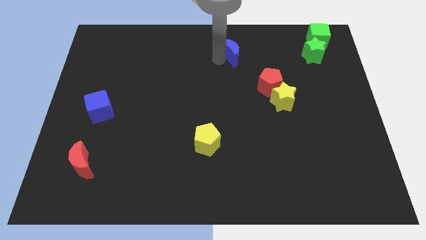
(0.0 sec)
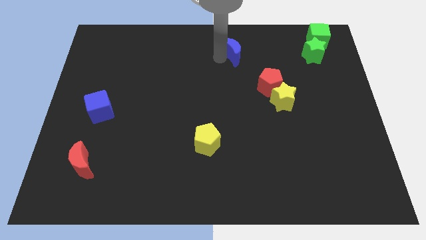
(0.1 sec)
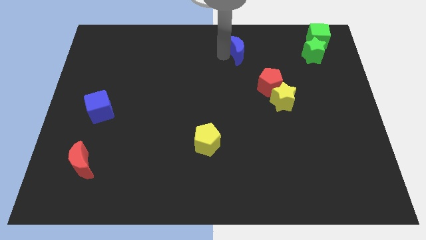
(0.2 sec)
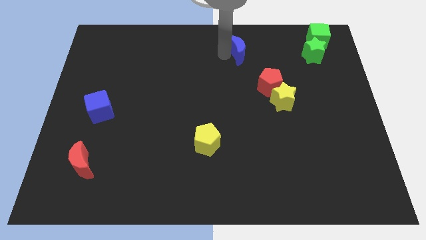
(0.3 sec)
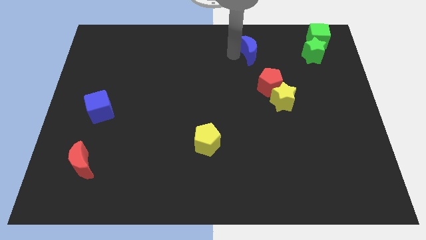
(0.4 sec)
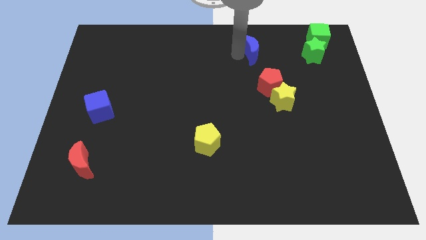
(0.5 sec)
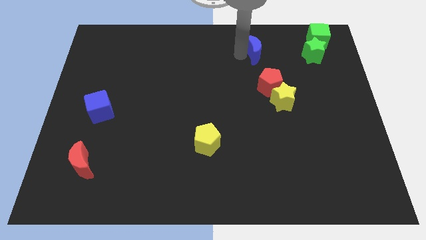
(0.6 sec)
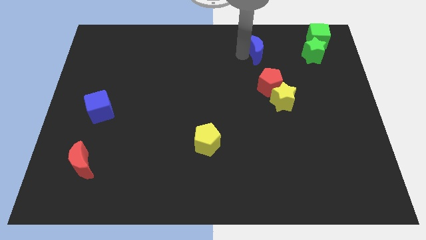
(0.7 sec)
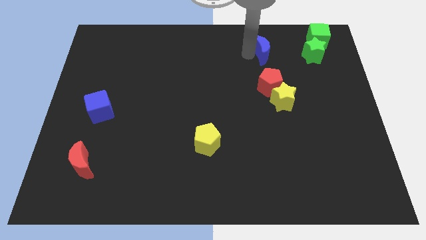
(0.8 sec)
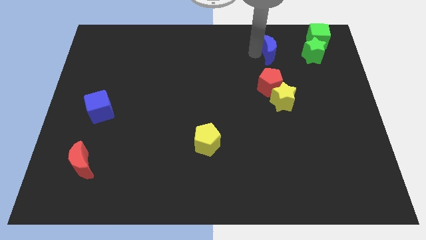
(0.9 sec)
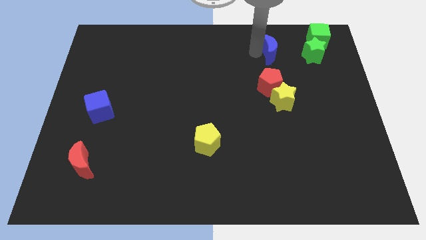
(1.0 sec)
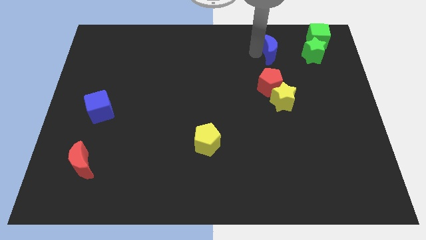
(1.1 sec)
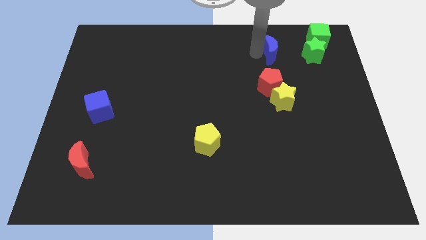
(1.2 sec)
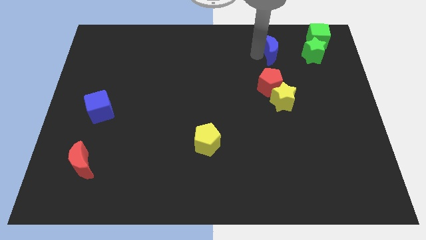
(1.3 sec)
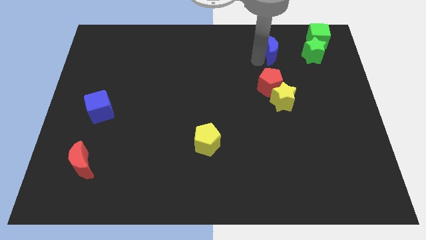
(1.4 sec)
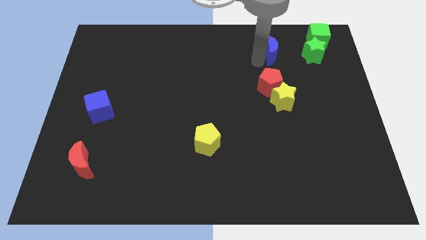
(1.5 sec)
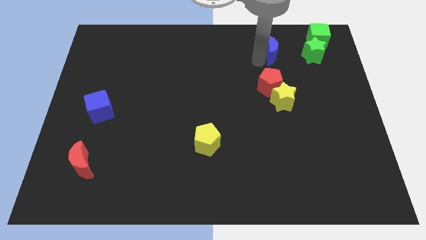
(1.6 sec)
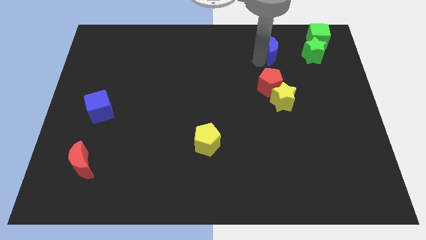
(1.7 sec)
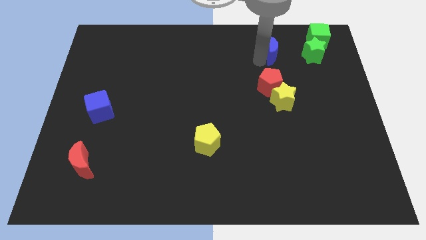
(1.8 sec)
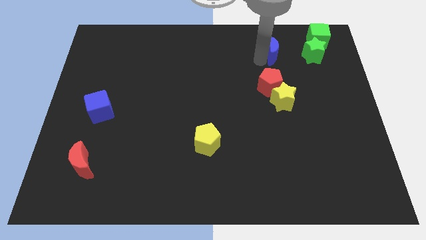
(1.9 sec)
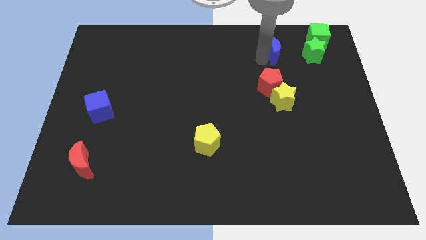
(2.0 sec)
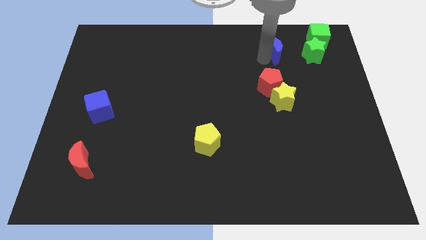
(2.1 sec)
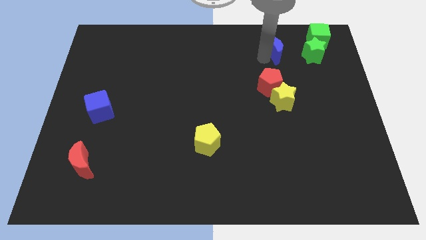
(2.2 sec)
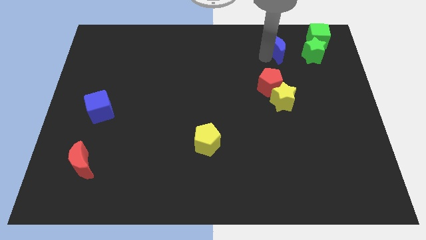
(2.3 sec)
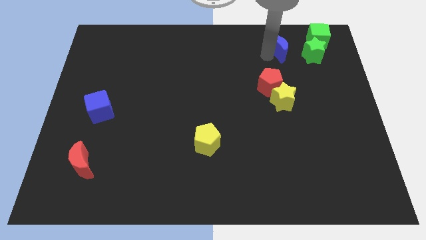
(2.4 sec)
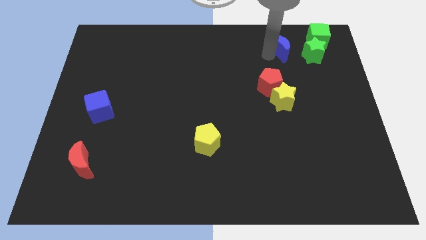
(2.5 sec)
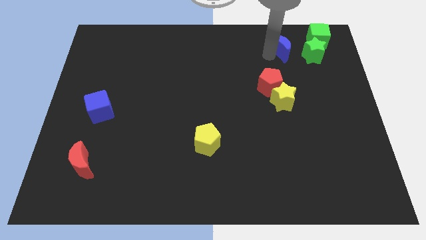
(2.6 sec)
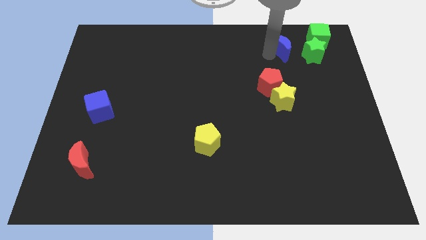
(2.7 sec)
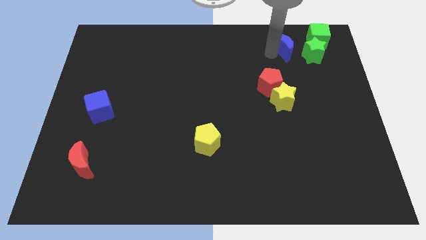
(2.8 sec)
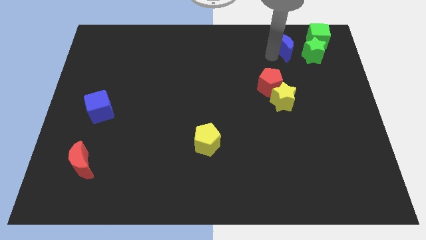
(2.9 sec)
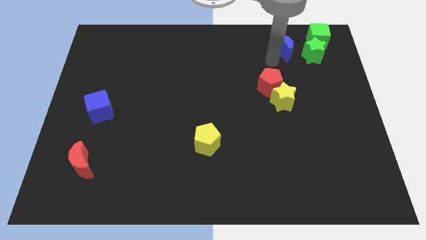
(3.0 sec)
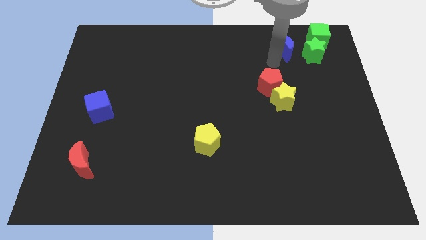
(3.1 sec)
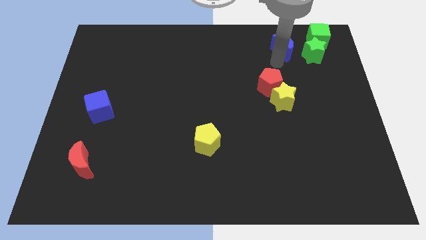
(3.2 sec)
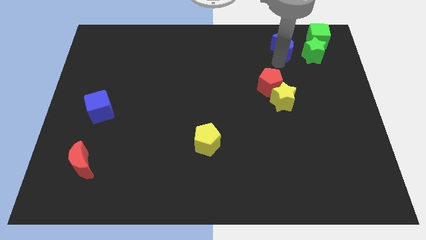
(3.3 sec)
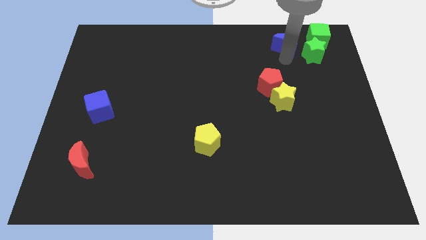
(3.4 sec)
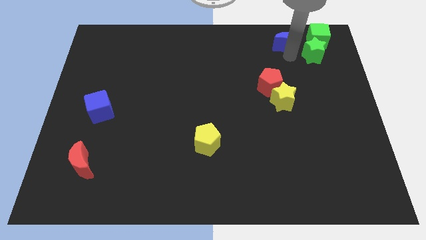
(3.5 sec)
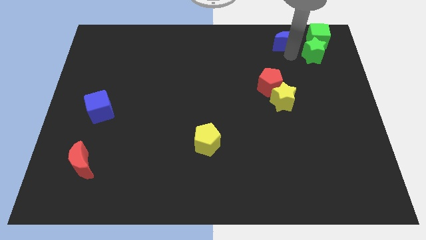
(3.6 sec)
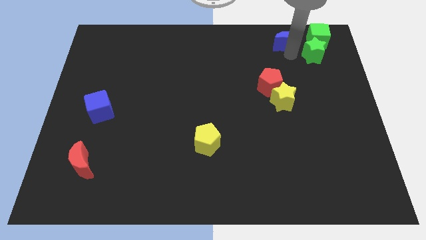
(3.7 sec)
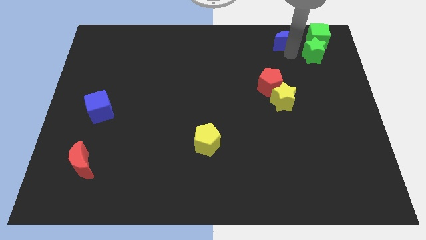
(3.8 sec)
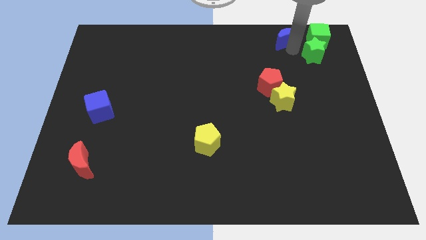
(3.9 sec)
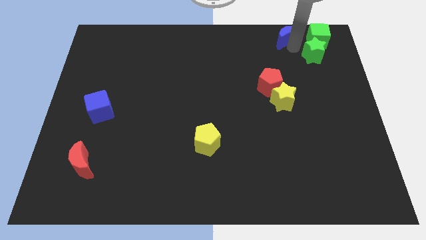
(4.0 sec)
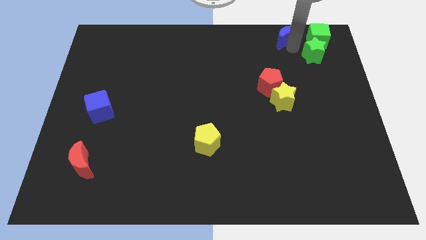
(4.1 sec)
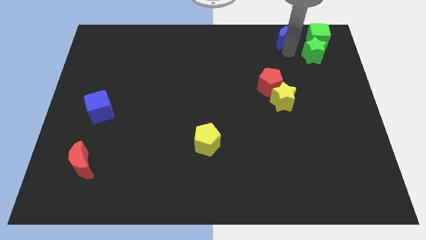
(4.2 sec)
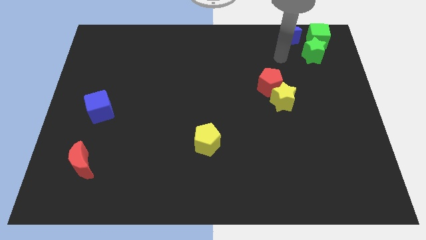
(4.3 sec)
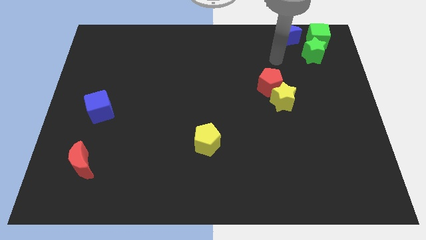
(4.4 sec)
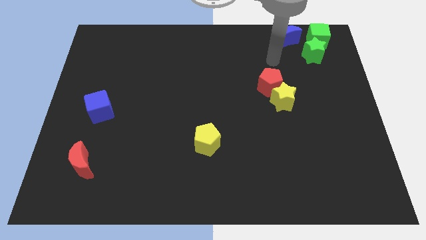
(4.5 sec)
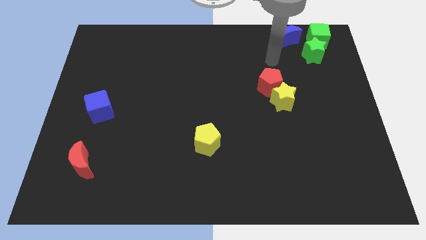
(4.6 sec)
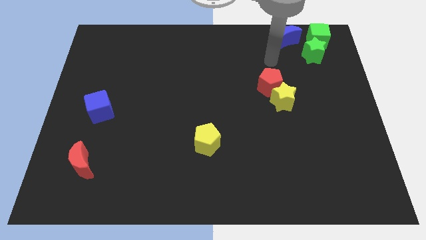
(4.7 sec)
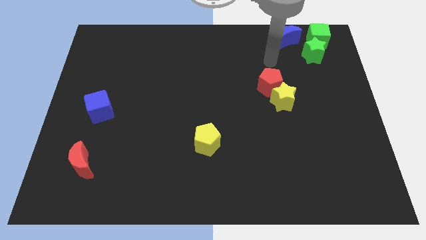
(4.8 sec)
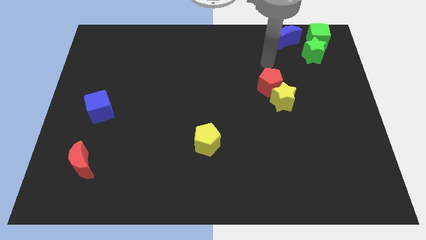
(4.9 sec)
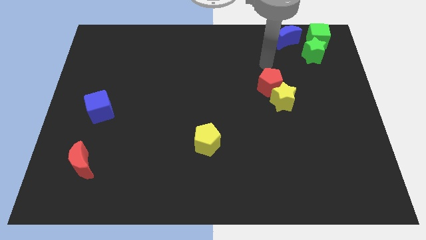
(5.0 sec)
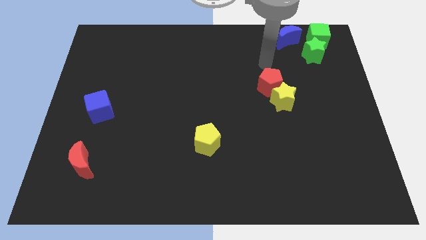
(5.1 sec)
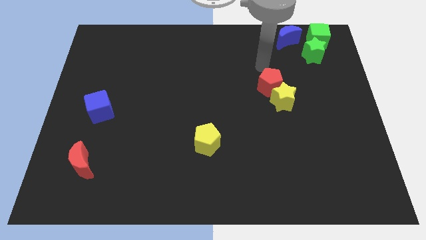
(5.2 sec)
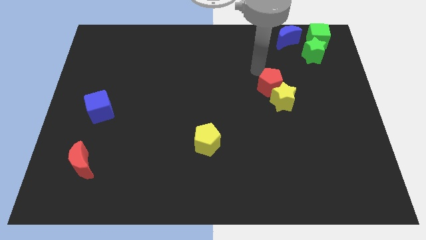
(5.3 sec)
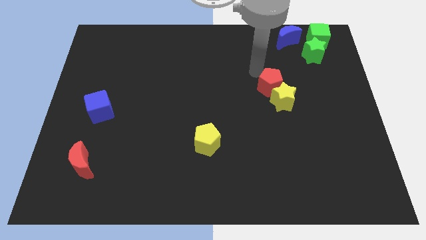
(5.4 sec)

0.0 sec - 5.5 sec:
move the blue crescent left to the green cube

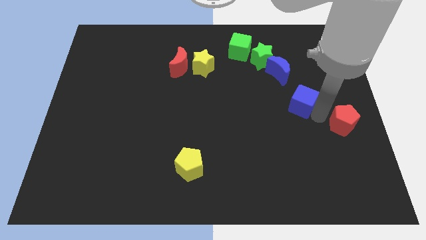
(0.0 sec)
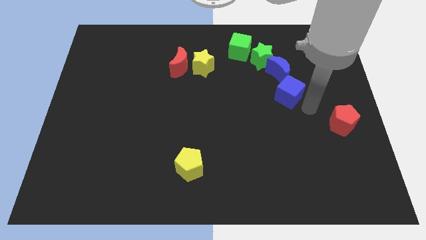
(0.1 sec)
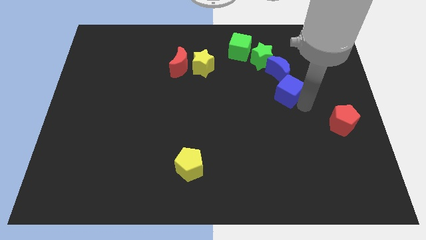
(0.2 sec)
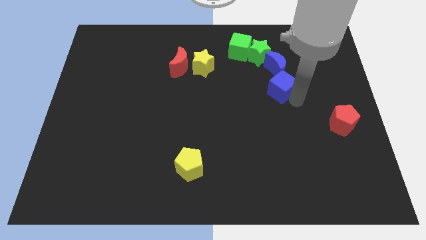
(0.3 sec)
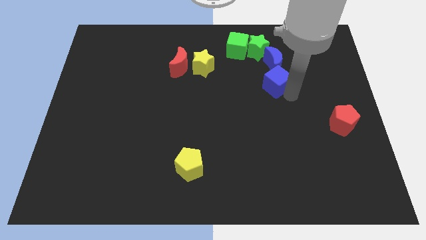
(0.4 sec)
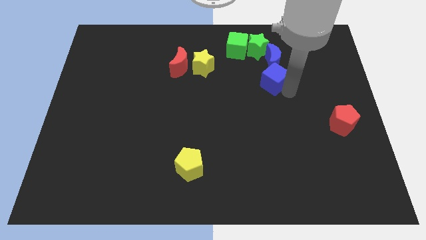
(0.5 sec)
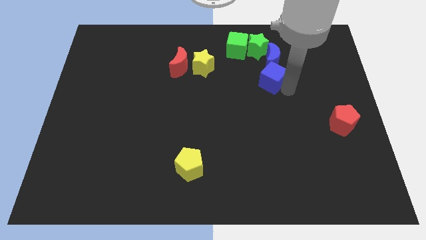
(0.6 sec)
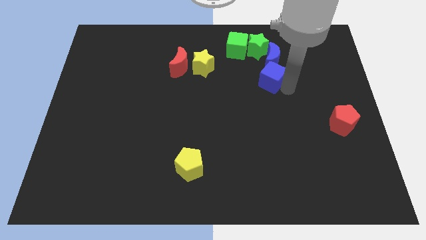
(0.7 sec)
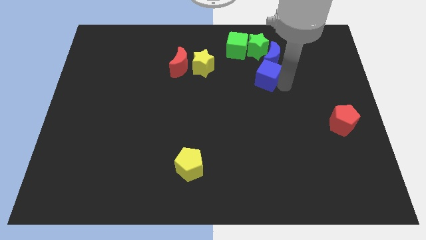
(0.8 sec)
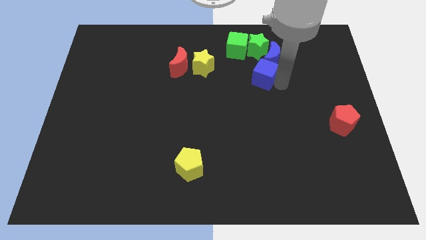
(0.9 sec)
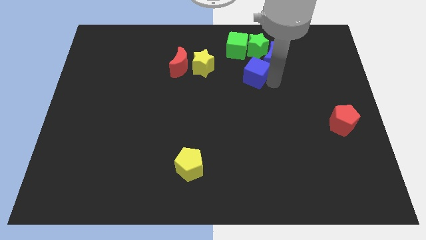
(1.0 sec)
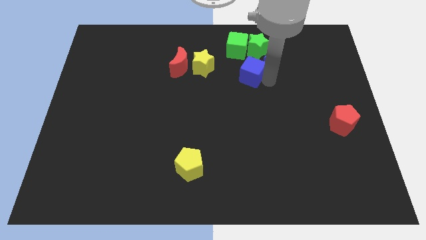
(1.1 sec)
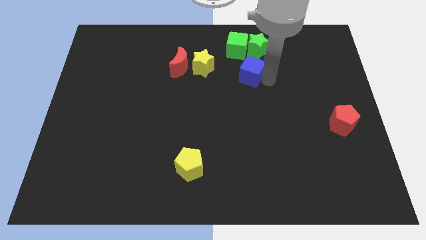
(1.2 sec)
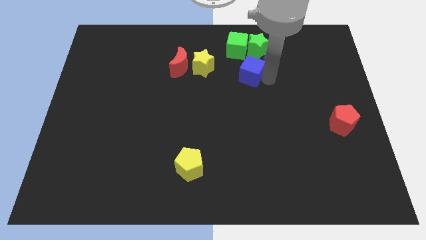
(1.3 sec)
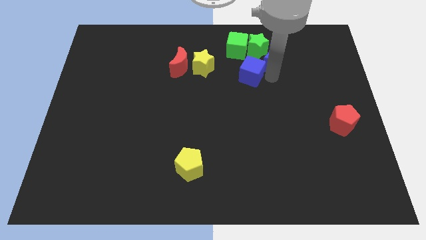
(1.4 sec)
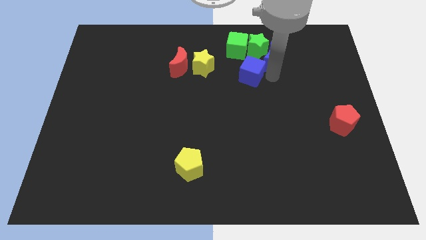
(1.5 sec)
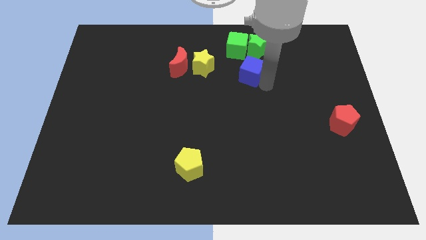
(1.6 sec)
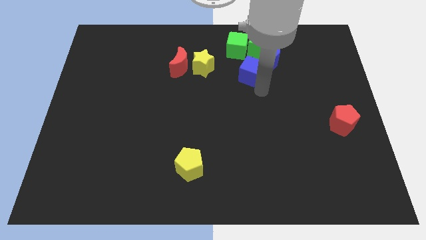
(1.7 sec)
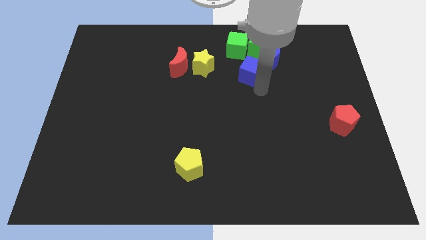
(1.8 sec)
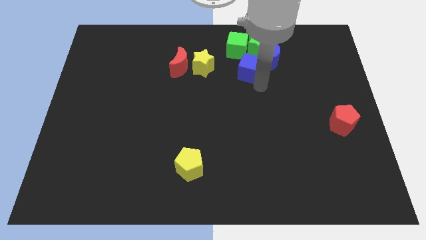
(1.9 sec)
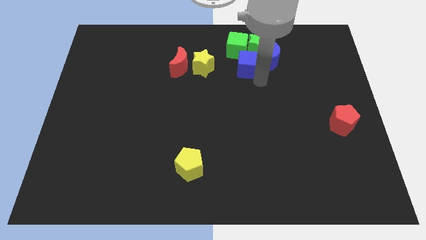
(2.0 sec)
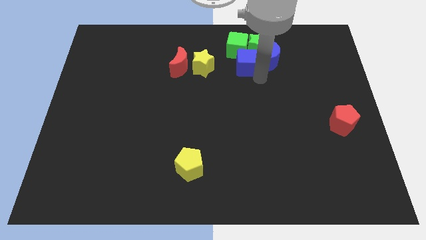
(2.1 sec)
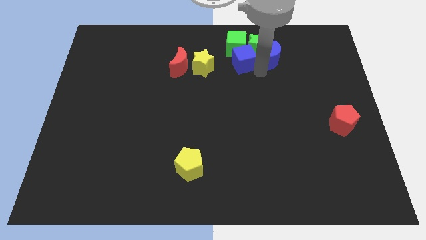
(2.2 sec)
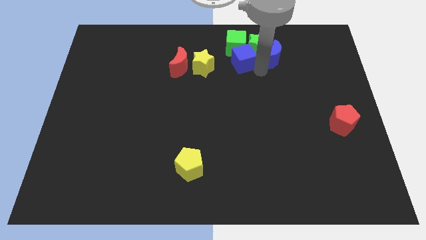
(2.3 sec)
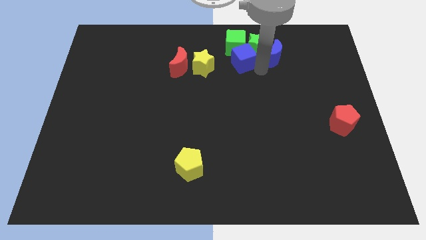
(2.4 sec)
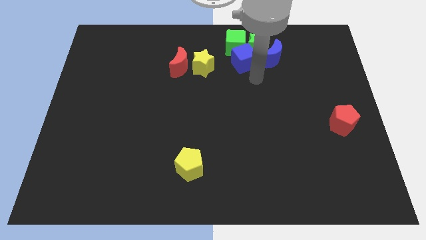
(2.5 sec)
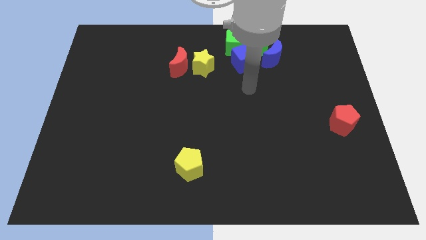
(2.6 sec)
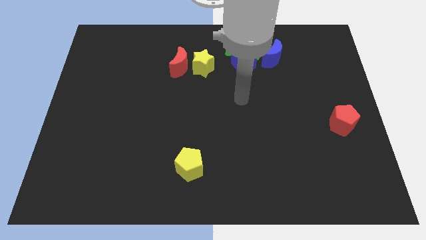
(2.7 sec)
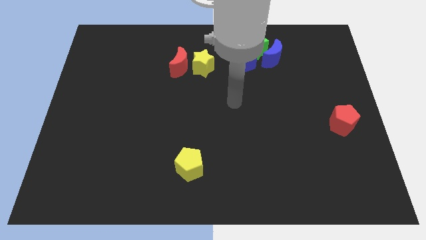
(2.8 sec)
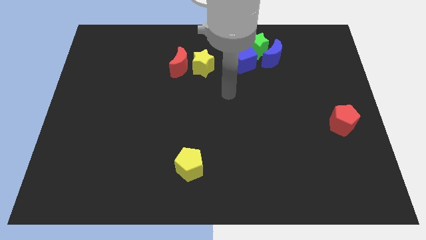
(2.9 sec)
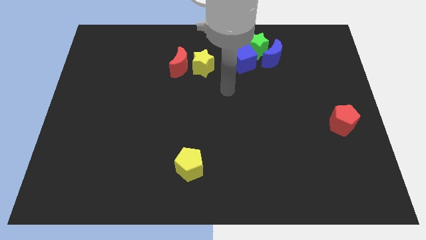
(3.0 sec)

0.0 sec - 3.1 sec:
push the blue cube to the green blocks and blue crescent

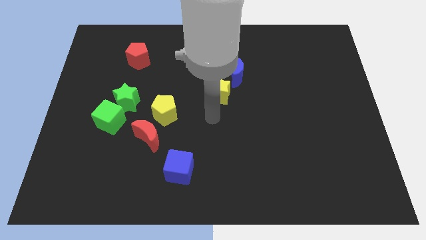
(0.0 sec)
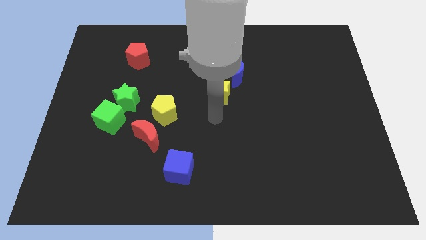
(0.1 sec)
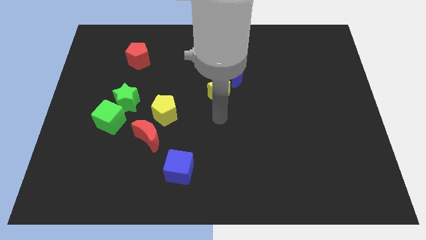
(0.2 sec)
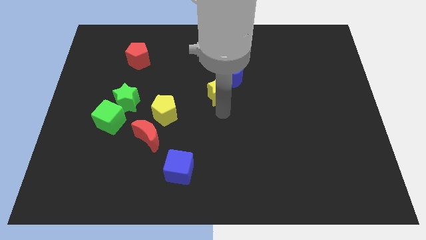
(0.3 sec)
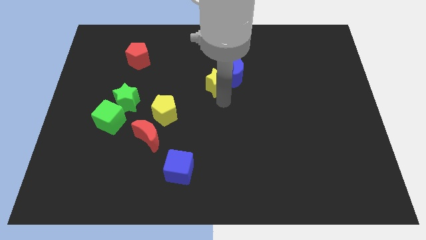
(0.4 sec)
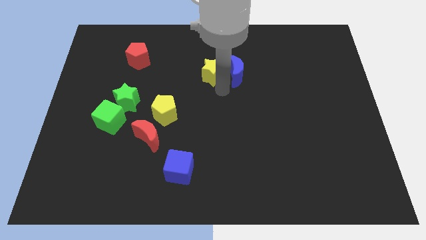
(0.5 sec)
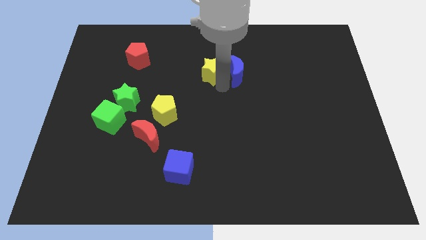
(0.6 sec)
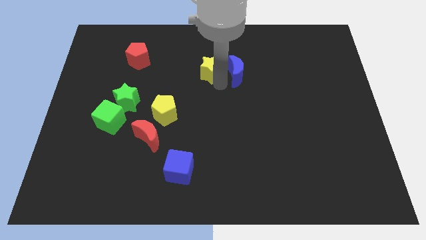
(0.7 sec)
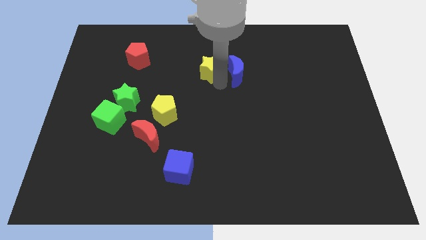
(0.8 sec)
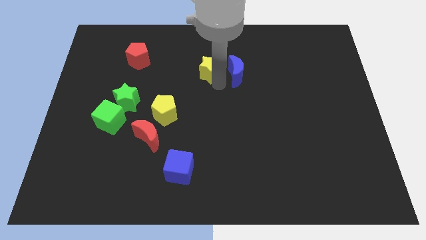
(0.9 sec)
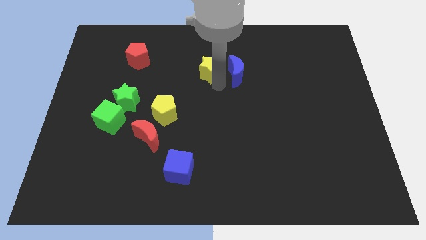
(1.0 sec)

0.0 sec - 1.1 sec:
push yellow star upwards
